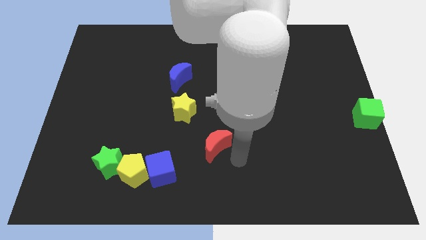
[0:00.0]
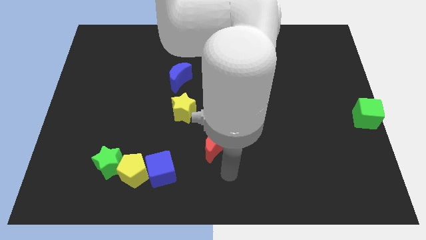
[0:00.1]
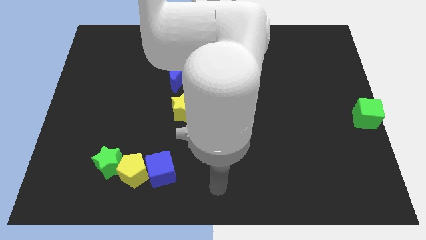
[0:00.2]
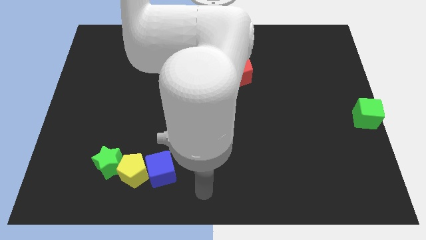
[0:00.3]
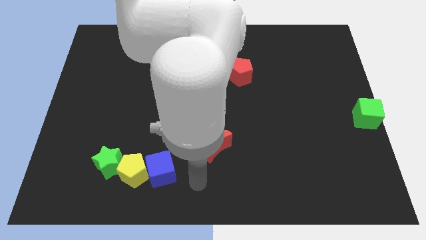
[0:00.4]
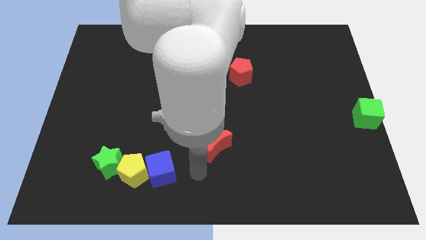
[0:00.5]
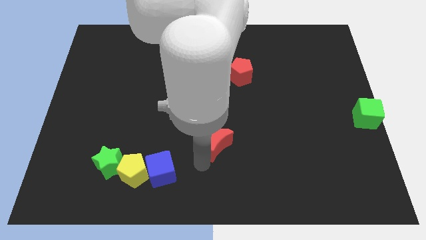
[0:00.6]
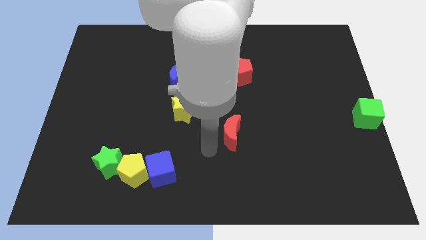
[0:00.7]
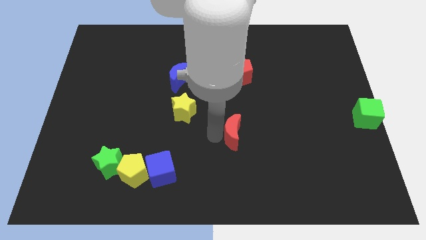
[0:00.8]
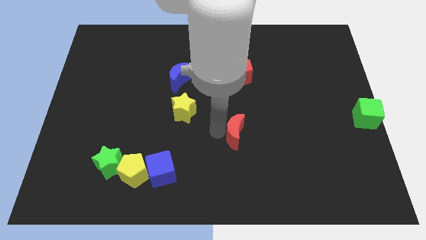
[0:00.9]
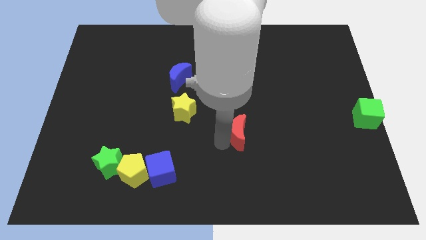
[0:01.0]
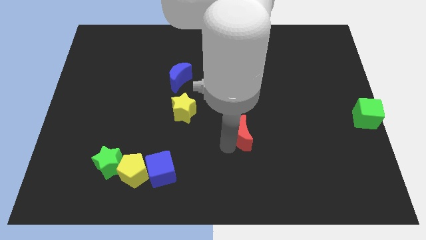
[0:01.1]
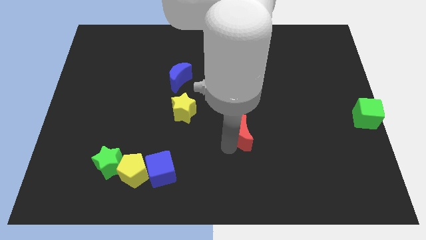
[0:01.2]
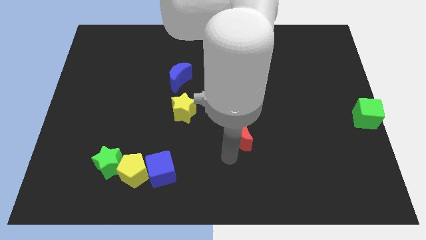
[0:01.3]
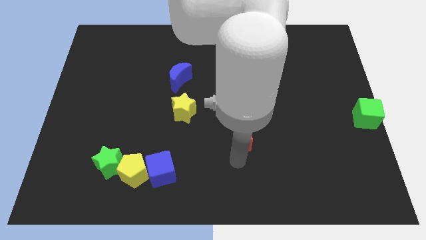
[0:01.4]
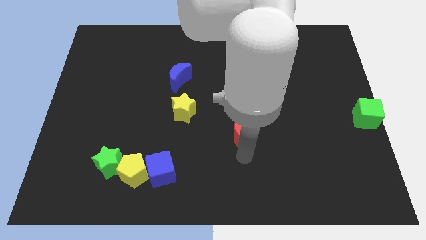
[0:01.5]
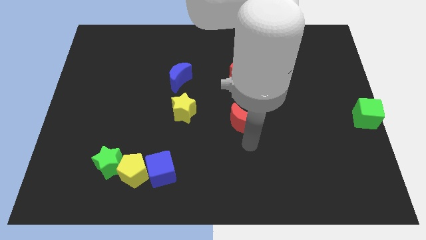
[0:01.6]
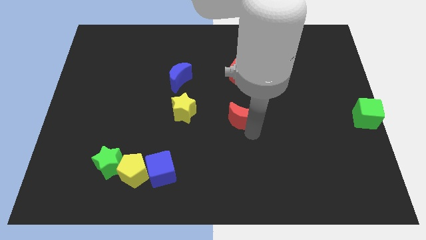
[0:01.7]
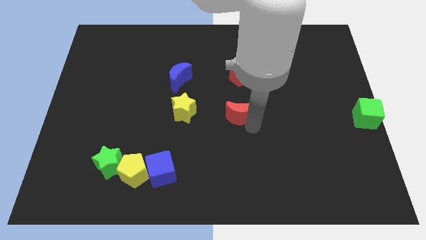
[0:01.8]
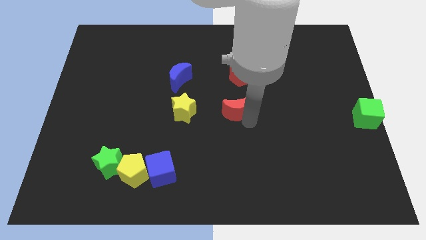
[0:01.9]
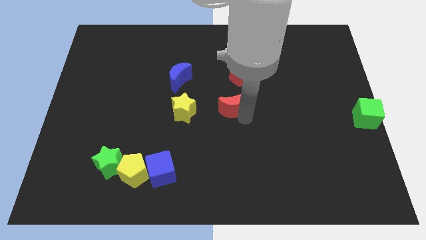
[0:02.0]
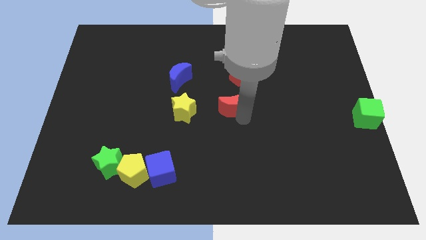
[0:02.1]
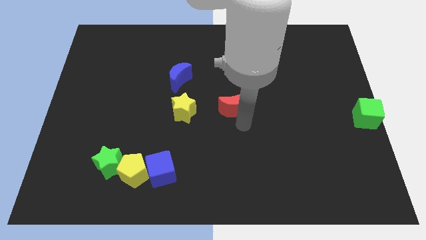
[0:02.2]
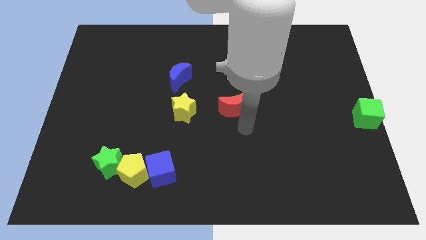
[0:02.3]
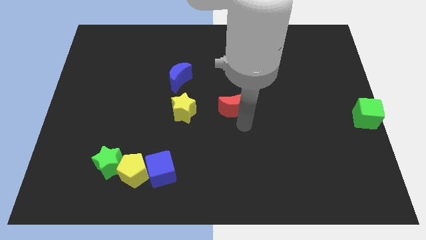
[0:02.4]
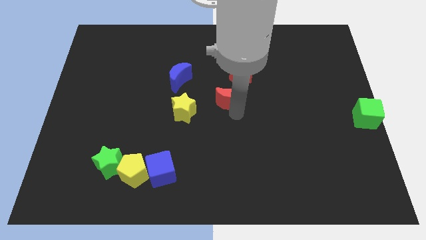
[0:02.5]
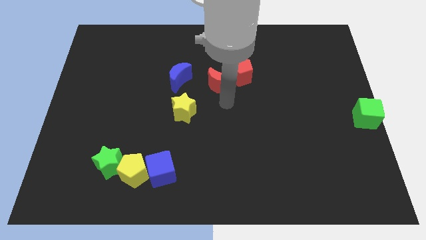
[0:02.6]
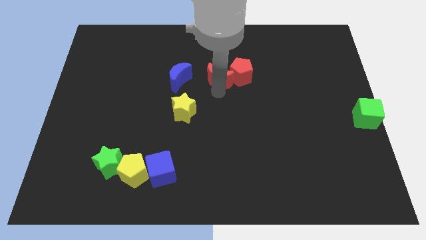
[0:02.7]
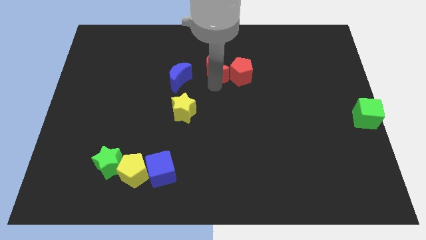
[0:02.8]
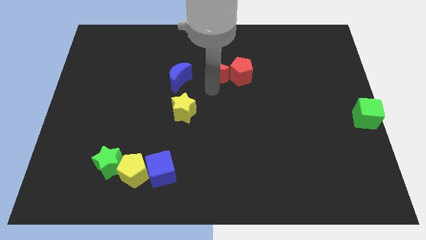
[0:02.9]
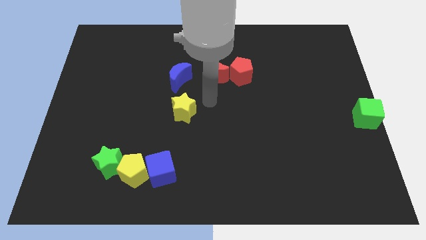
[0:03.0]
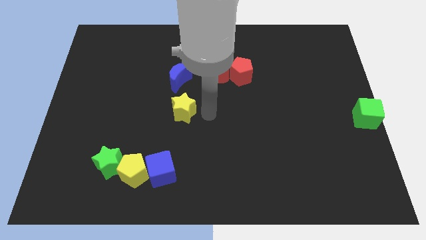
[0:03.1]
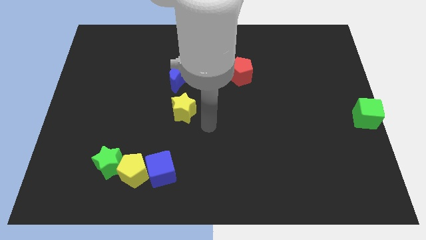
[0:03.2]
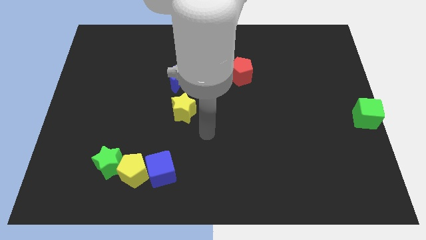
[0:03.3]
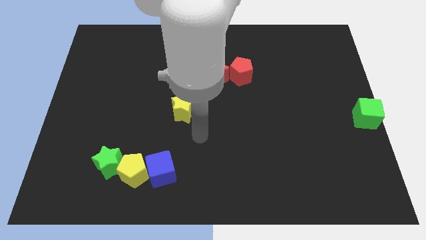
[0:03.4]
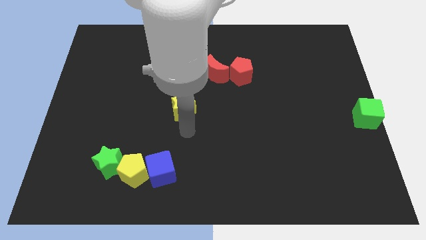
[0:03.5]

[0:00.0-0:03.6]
push the group of red blocks at the right of the blue crescent

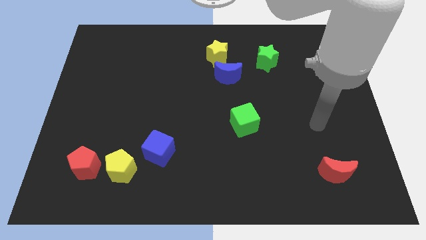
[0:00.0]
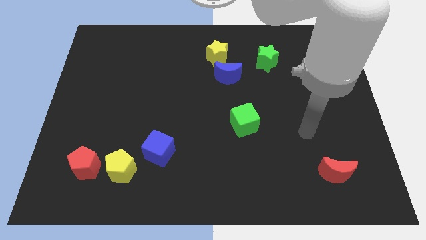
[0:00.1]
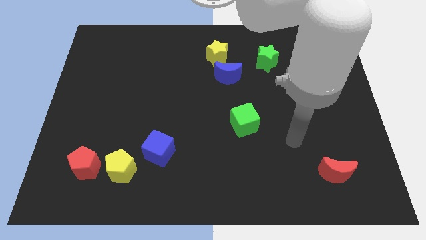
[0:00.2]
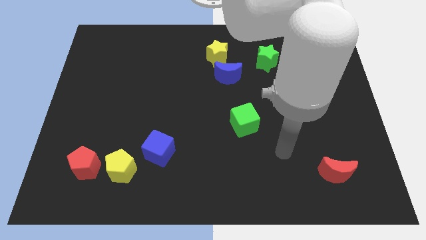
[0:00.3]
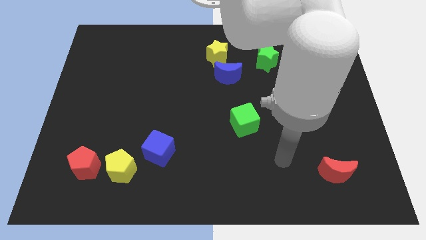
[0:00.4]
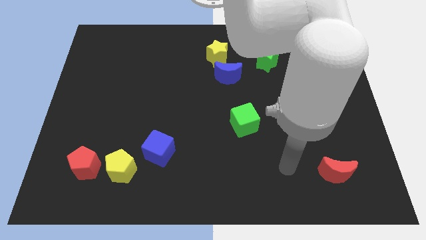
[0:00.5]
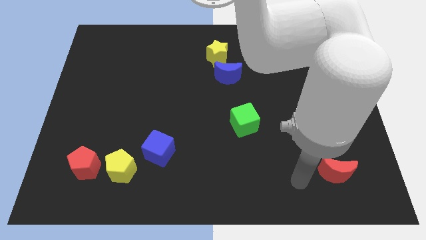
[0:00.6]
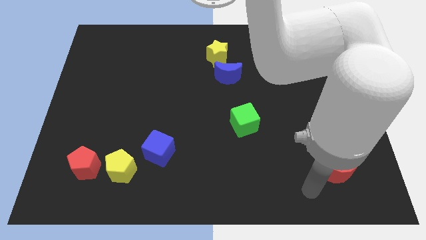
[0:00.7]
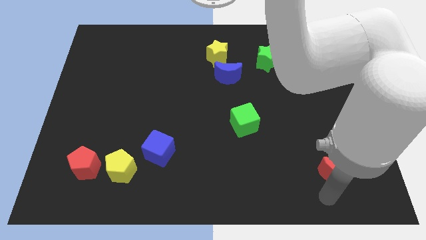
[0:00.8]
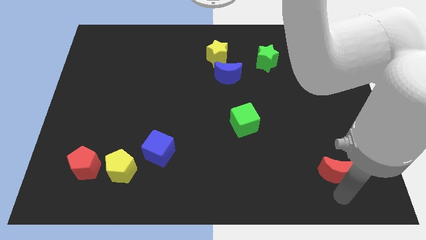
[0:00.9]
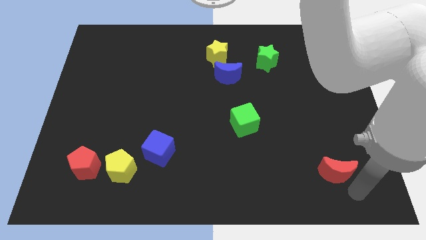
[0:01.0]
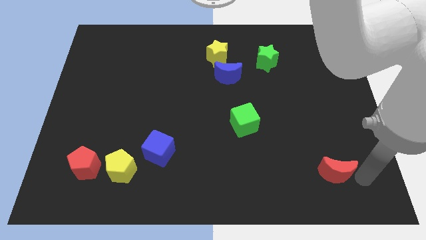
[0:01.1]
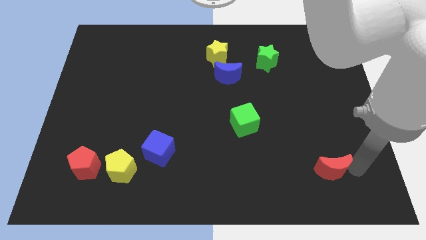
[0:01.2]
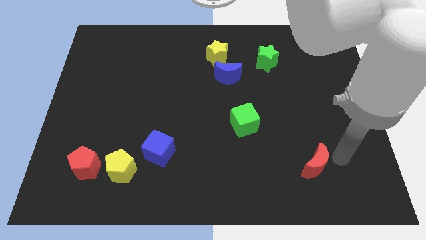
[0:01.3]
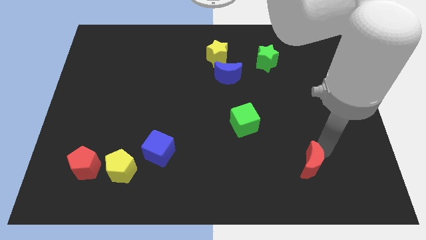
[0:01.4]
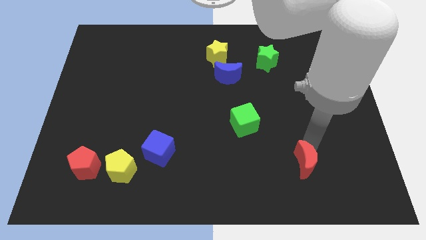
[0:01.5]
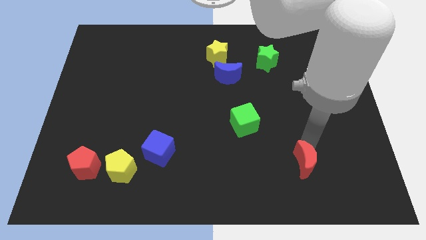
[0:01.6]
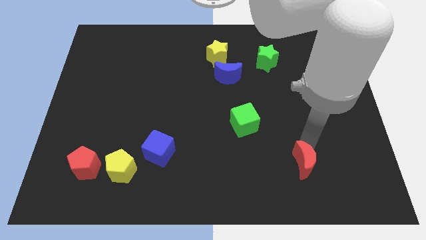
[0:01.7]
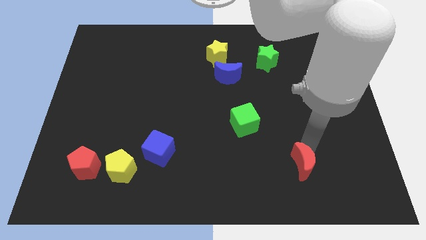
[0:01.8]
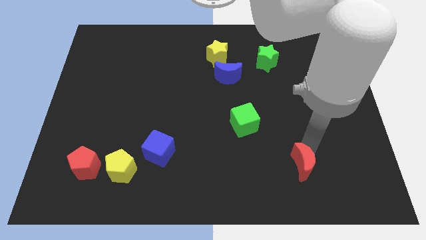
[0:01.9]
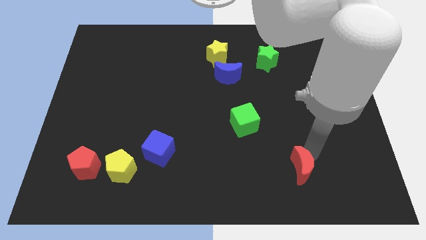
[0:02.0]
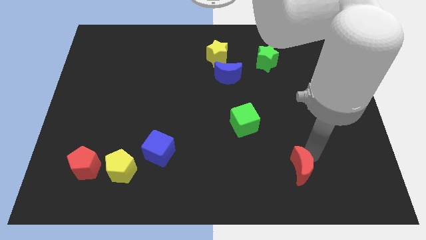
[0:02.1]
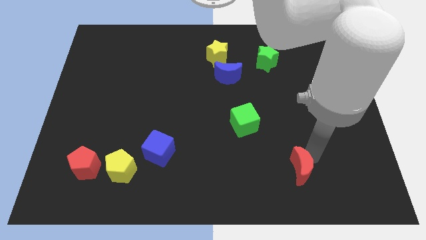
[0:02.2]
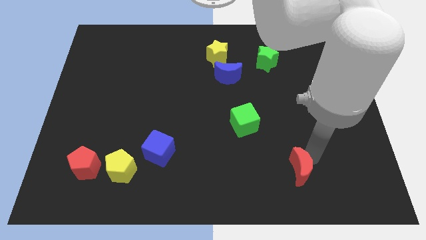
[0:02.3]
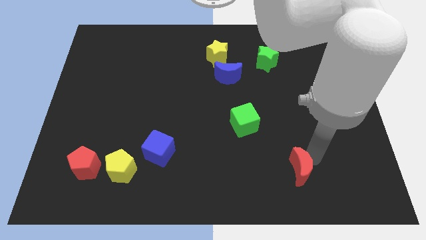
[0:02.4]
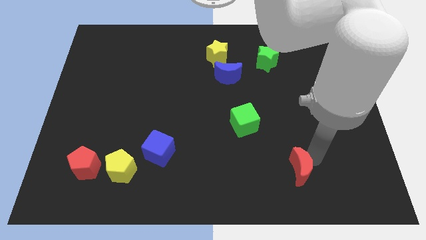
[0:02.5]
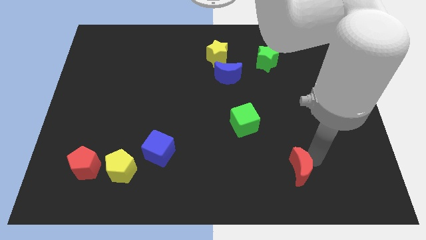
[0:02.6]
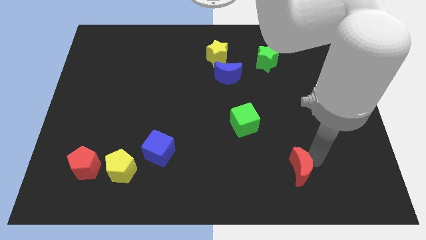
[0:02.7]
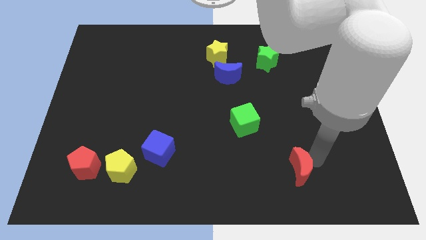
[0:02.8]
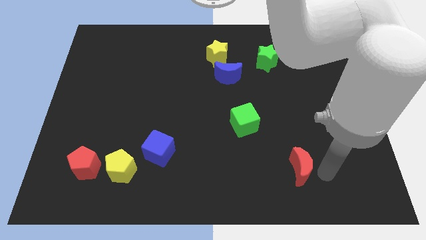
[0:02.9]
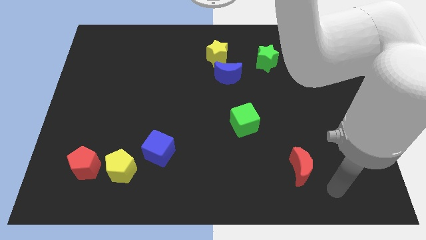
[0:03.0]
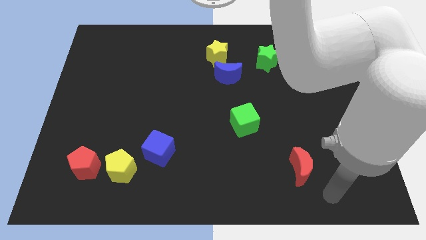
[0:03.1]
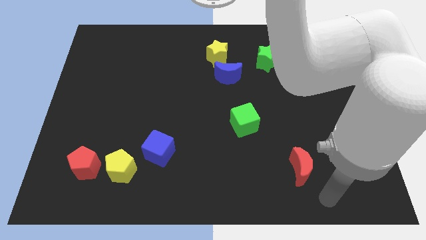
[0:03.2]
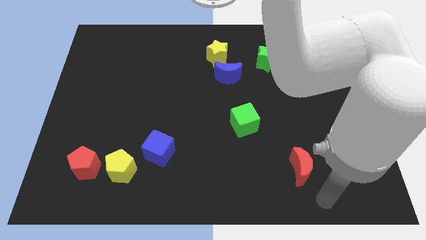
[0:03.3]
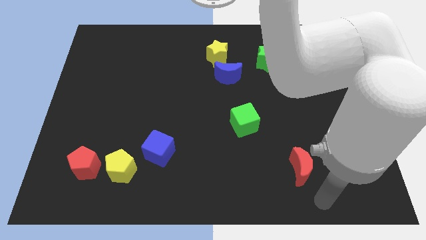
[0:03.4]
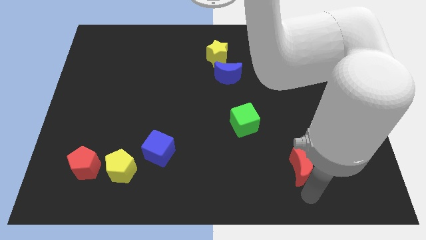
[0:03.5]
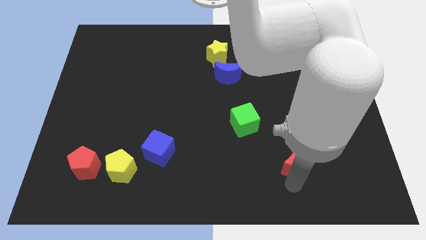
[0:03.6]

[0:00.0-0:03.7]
place the red crescent diagonal below the green star

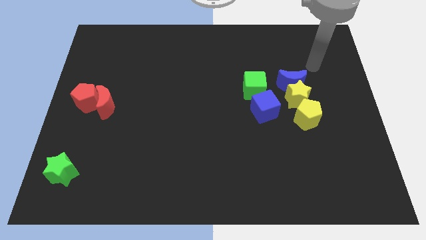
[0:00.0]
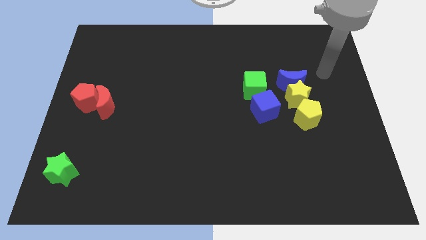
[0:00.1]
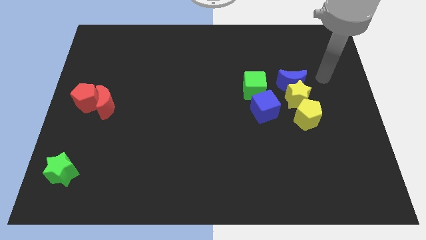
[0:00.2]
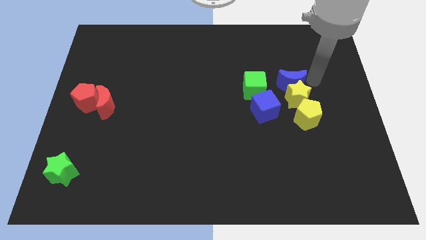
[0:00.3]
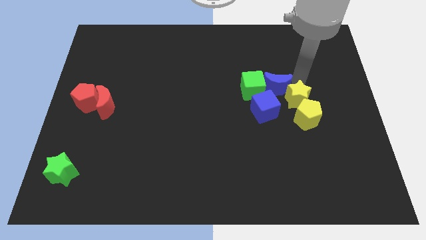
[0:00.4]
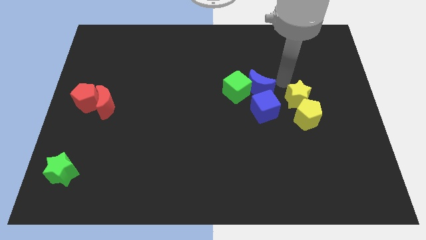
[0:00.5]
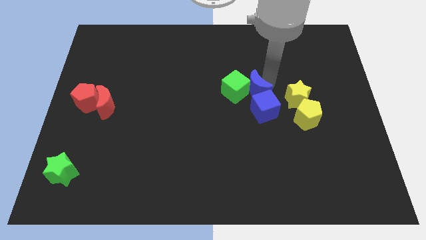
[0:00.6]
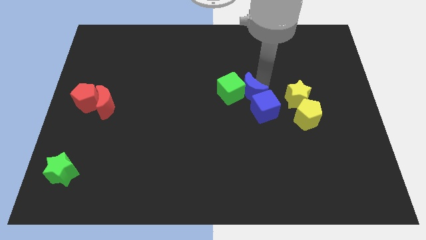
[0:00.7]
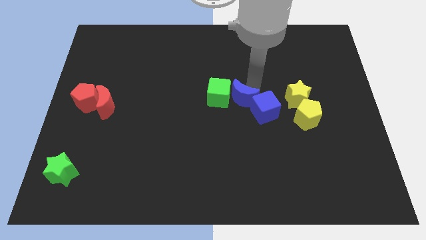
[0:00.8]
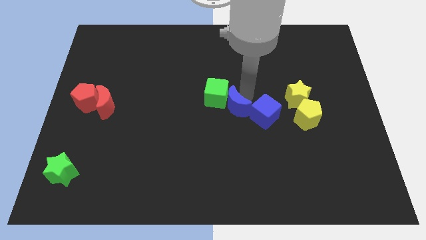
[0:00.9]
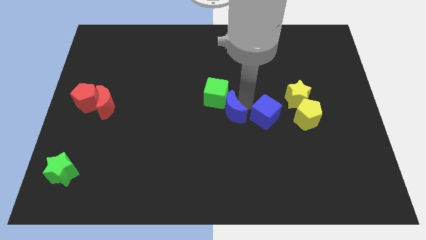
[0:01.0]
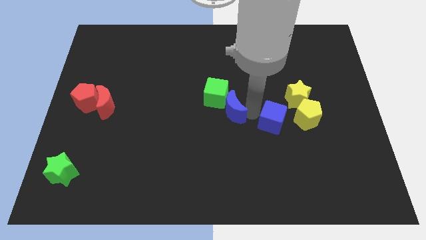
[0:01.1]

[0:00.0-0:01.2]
push the blue moon into the green cube

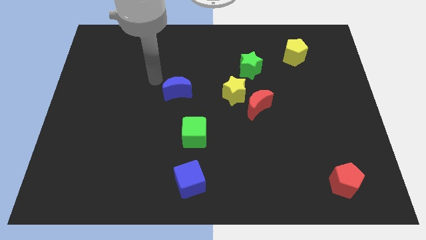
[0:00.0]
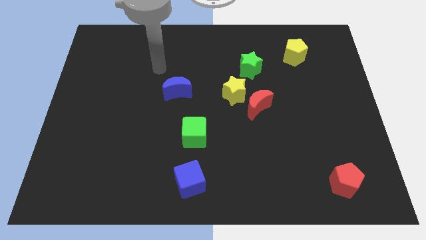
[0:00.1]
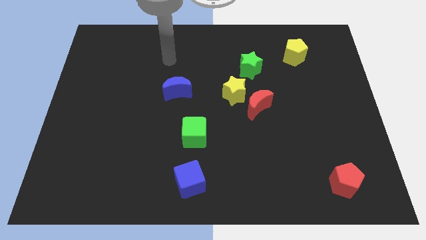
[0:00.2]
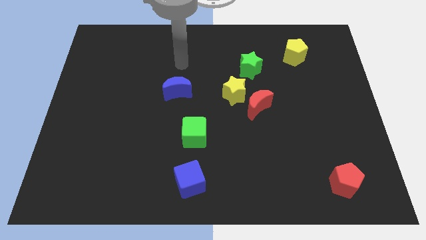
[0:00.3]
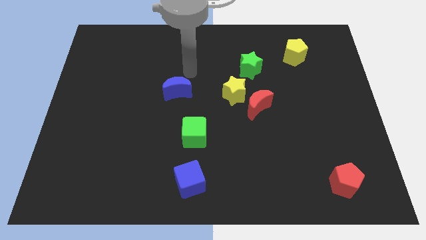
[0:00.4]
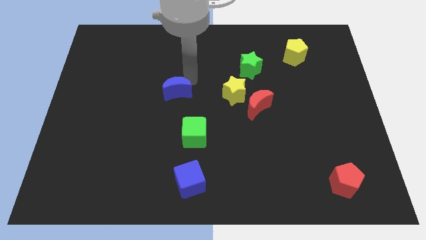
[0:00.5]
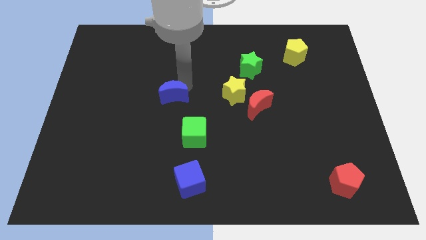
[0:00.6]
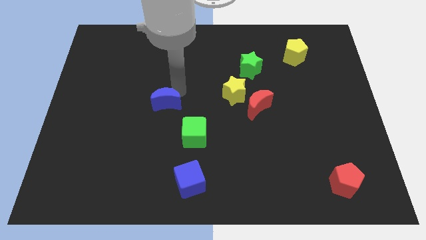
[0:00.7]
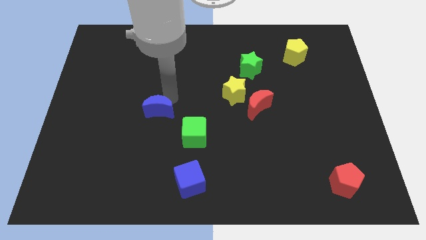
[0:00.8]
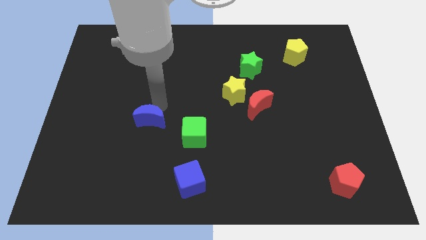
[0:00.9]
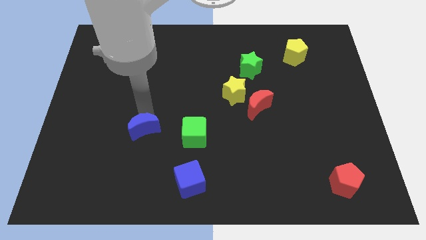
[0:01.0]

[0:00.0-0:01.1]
push blue moon to the left of green cube
